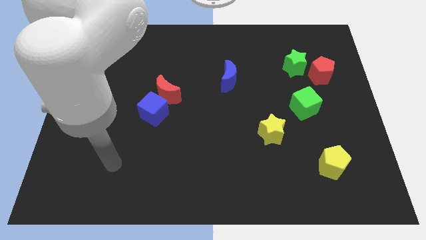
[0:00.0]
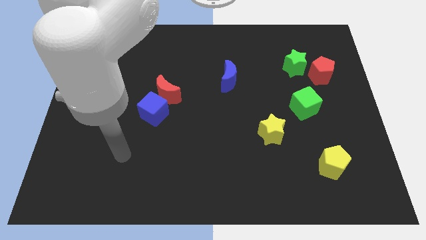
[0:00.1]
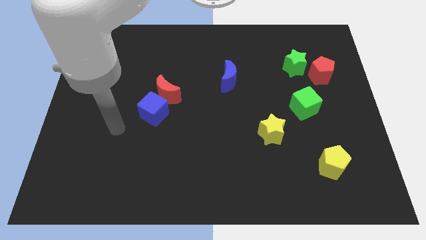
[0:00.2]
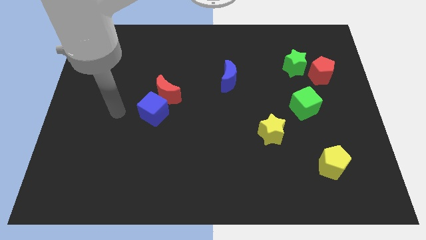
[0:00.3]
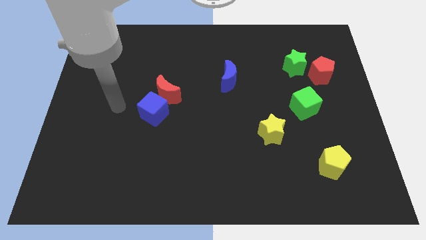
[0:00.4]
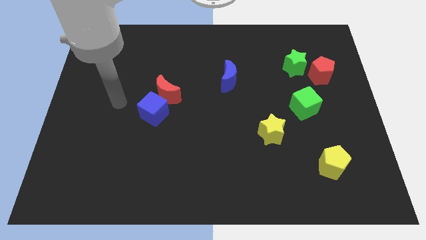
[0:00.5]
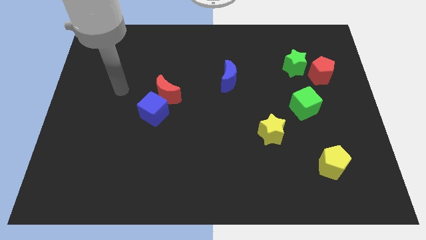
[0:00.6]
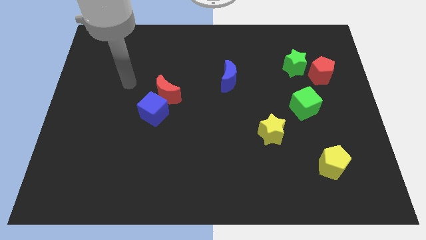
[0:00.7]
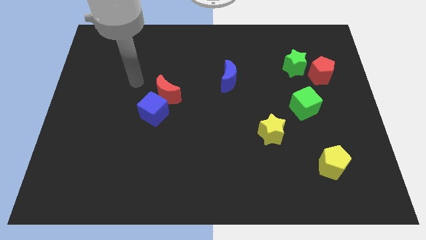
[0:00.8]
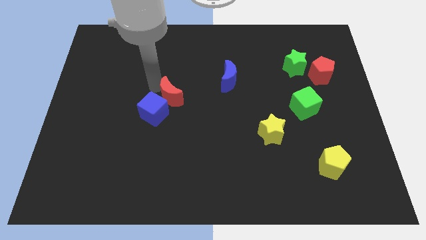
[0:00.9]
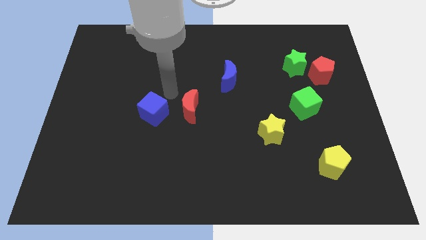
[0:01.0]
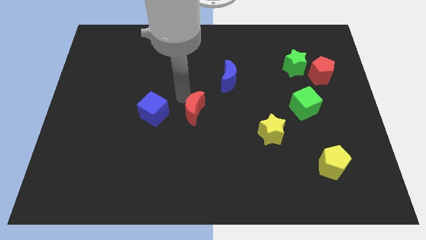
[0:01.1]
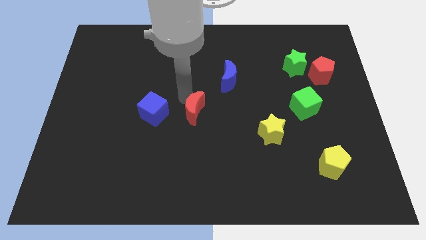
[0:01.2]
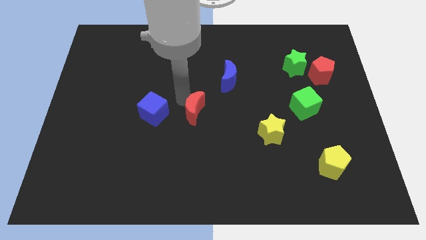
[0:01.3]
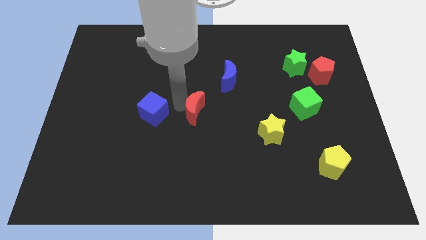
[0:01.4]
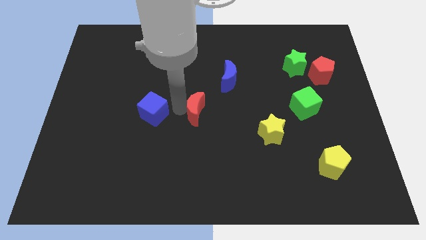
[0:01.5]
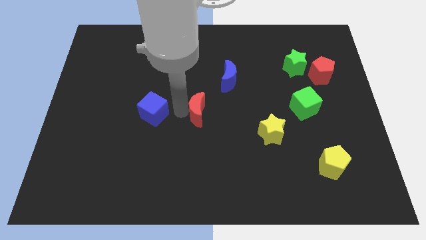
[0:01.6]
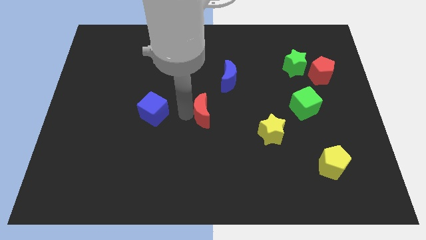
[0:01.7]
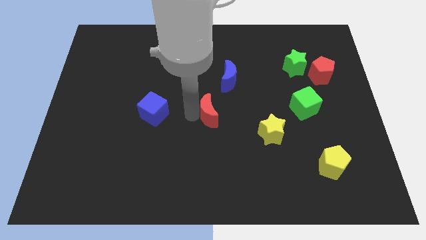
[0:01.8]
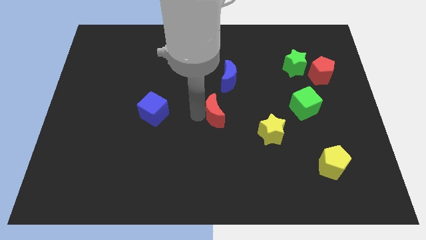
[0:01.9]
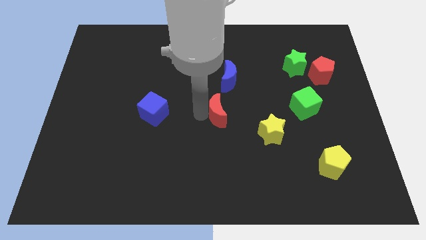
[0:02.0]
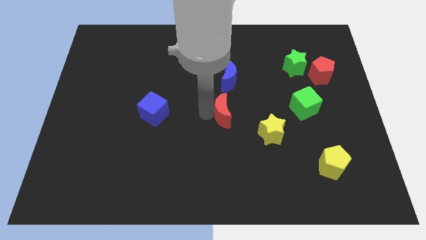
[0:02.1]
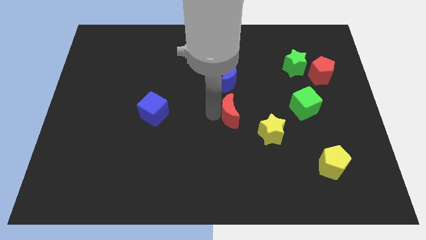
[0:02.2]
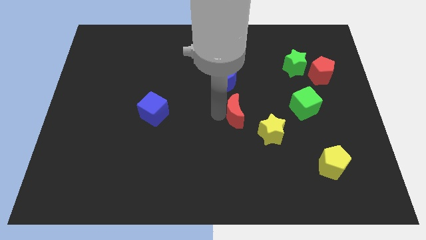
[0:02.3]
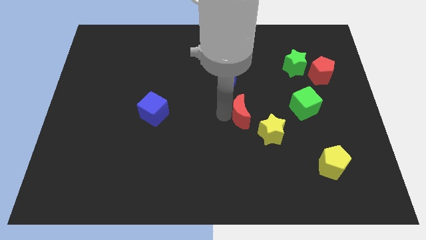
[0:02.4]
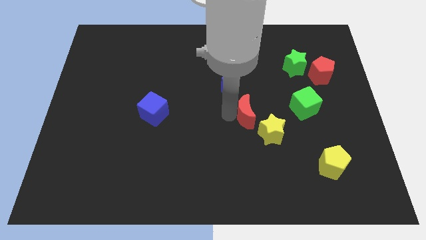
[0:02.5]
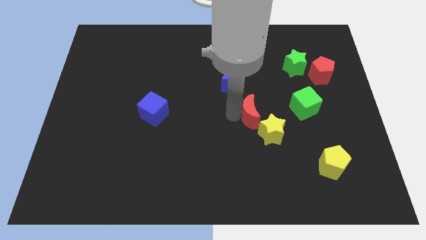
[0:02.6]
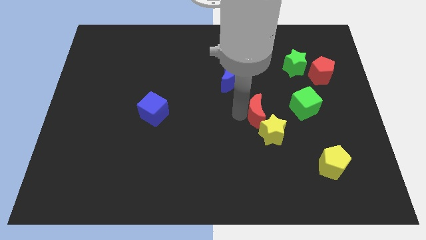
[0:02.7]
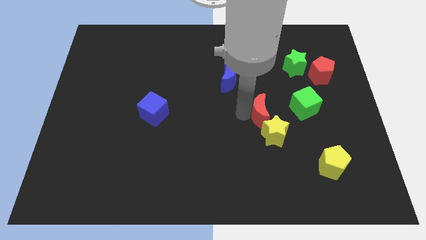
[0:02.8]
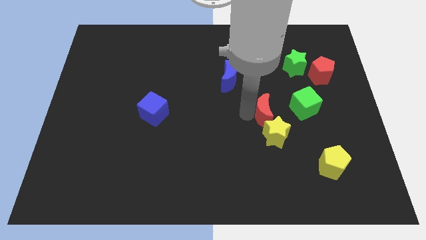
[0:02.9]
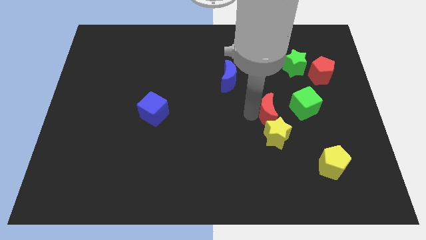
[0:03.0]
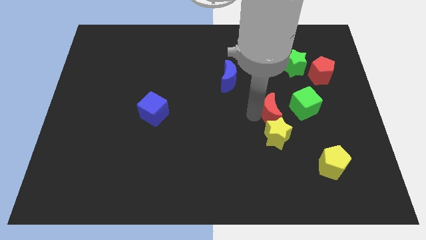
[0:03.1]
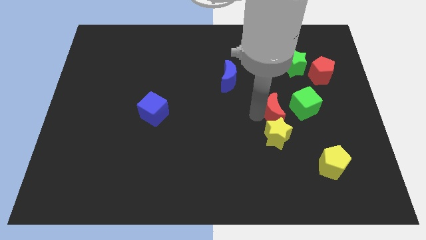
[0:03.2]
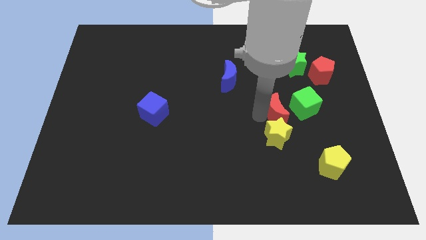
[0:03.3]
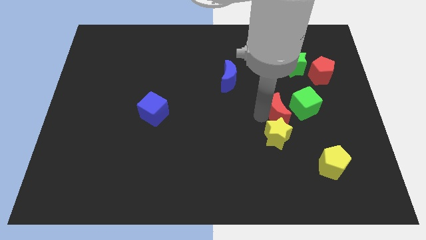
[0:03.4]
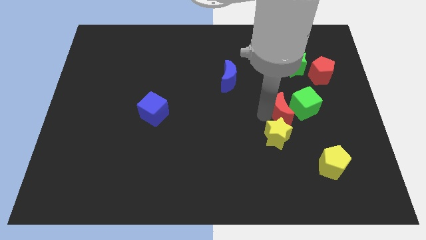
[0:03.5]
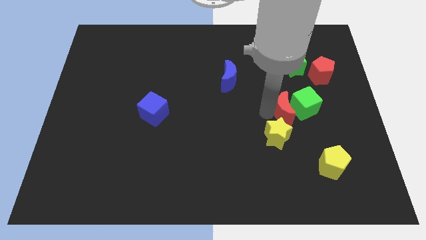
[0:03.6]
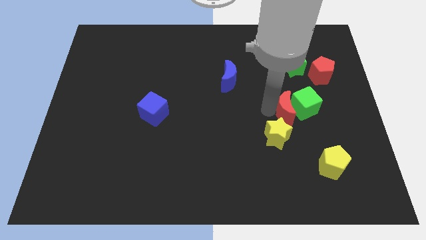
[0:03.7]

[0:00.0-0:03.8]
slide the red moon next to the green cube

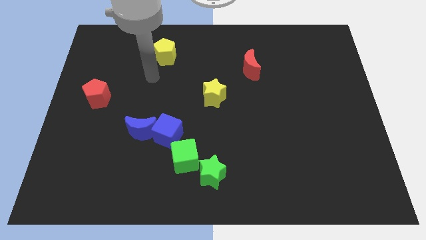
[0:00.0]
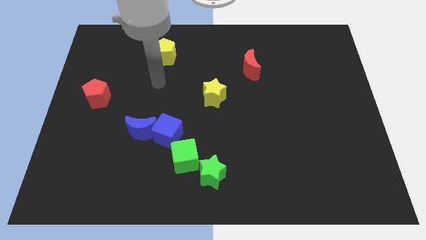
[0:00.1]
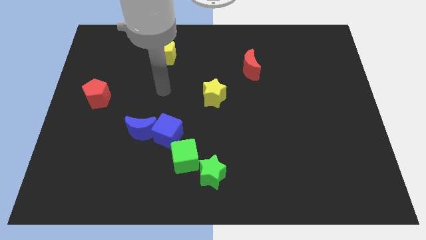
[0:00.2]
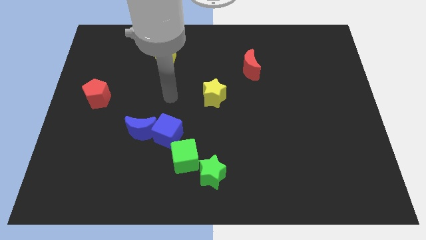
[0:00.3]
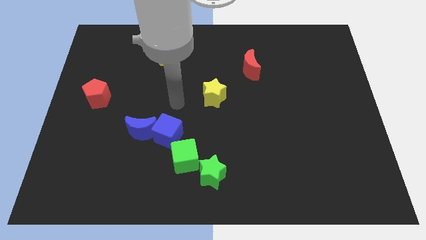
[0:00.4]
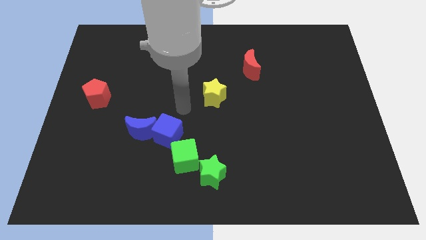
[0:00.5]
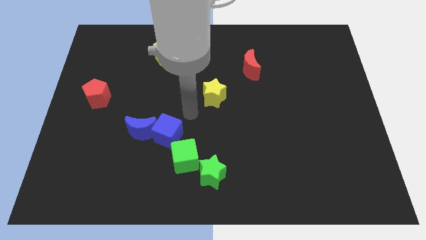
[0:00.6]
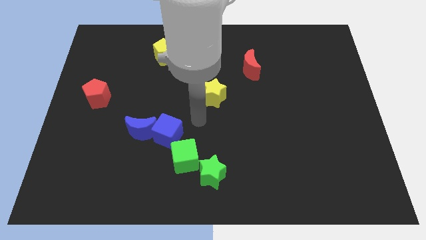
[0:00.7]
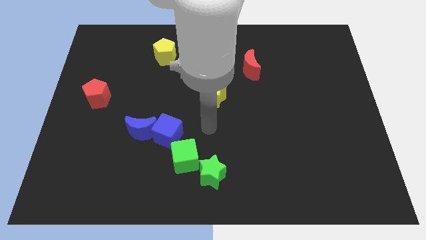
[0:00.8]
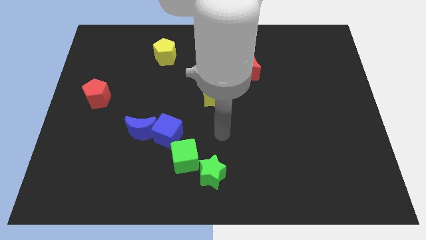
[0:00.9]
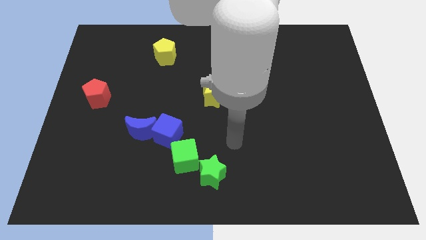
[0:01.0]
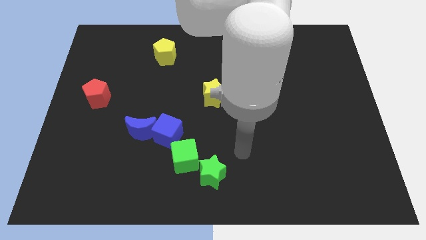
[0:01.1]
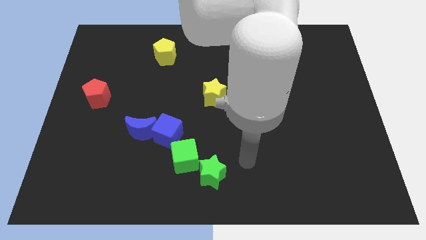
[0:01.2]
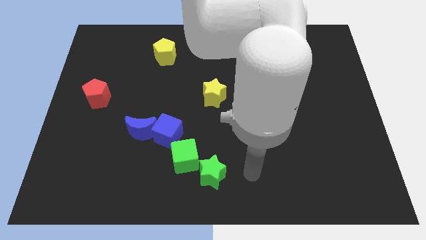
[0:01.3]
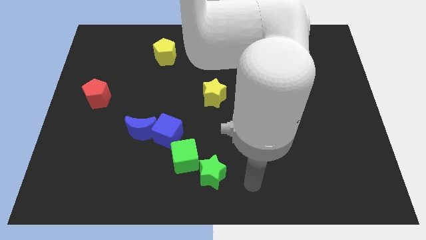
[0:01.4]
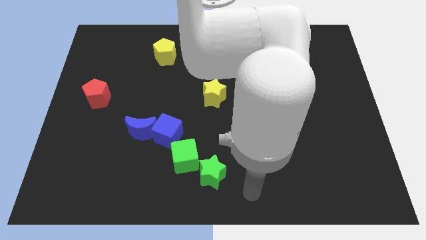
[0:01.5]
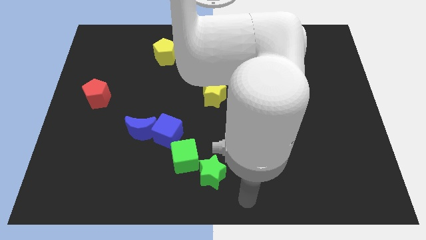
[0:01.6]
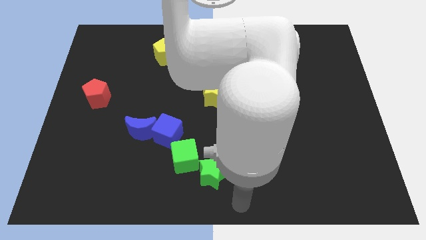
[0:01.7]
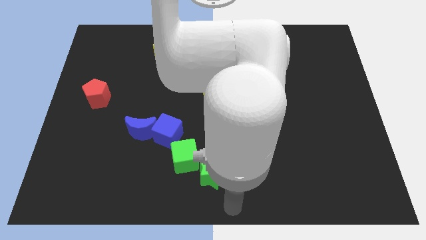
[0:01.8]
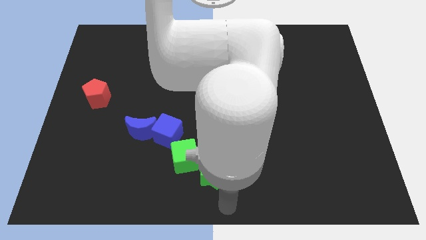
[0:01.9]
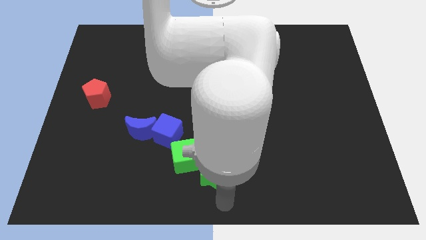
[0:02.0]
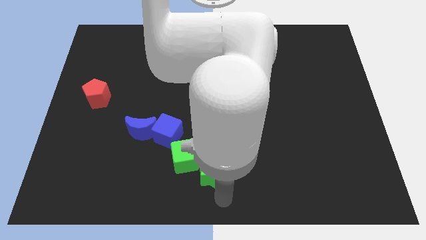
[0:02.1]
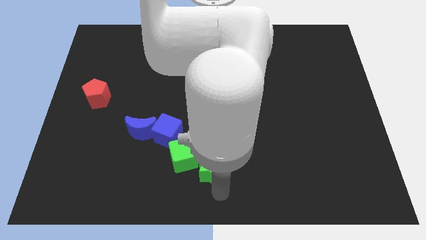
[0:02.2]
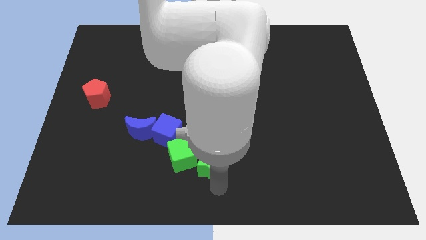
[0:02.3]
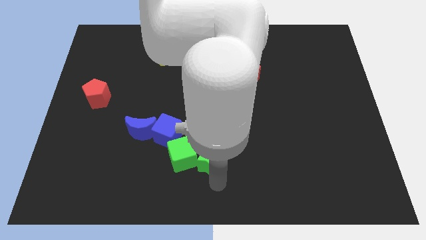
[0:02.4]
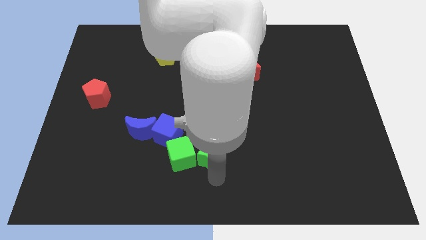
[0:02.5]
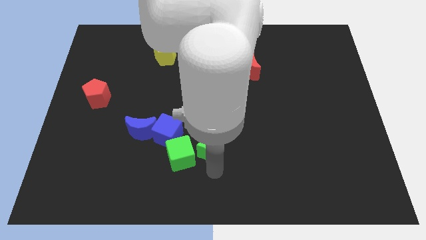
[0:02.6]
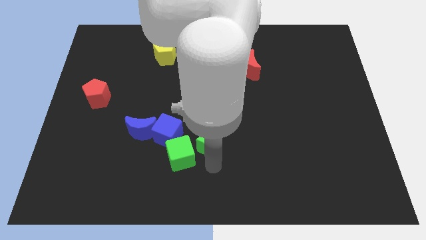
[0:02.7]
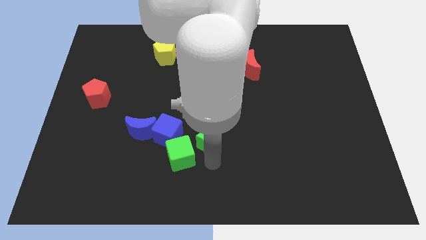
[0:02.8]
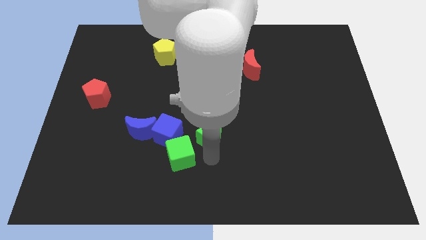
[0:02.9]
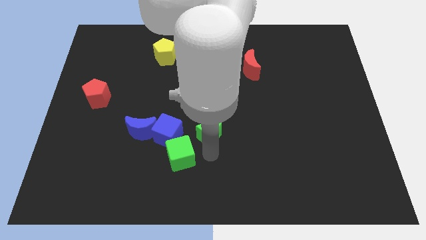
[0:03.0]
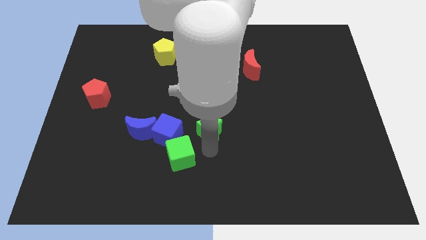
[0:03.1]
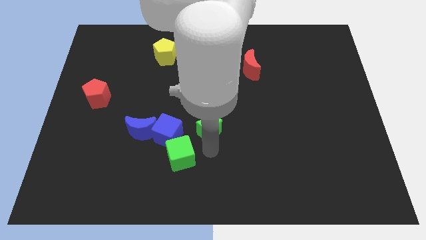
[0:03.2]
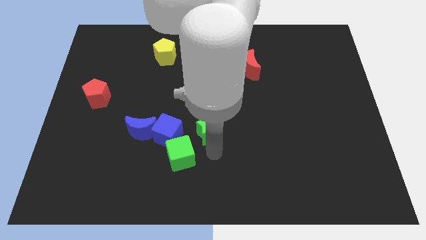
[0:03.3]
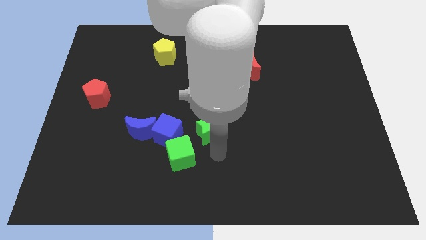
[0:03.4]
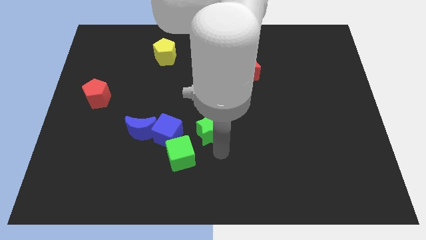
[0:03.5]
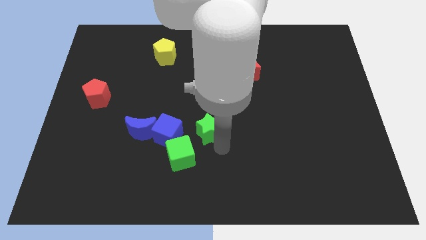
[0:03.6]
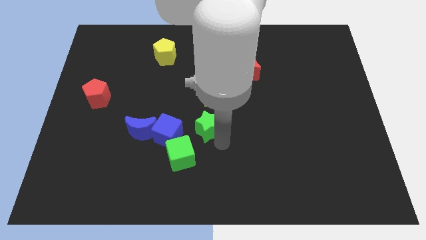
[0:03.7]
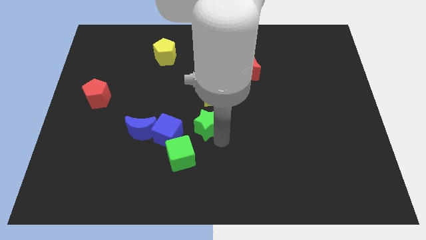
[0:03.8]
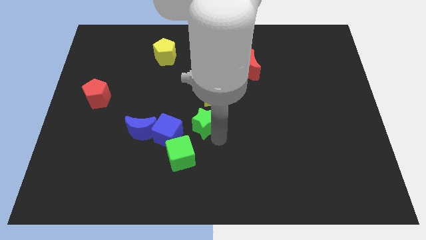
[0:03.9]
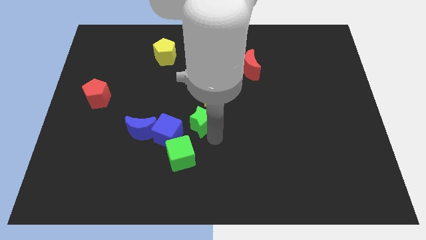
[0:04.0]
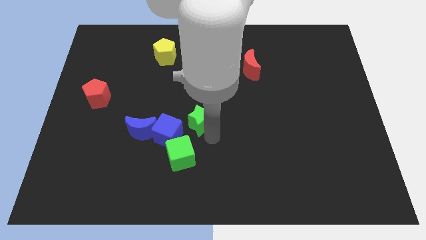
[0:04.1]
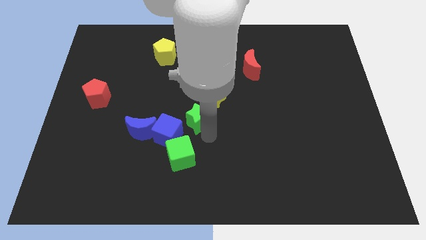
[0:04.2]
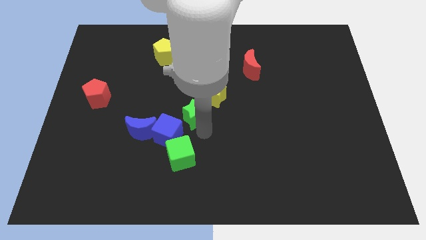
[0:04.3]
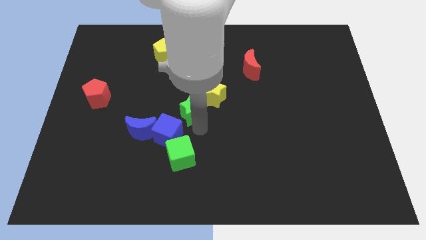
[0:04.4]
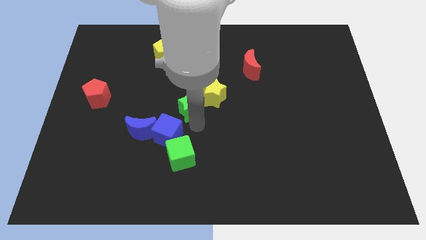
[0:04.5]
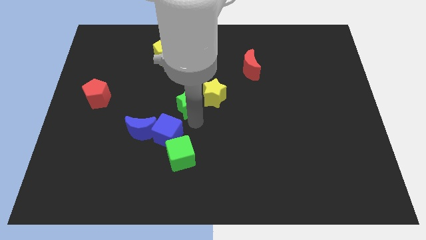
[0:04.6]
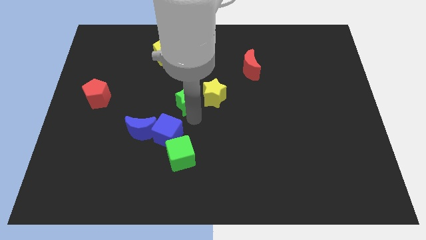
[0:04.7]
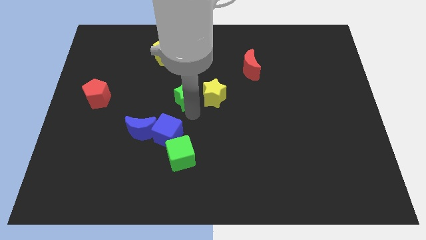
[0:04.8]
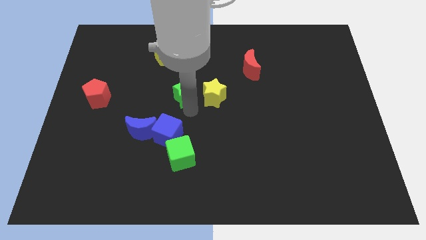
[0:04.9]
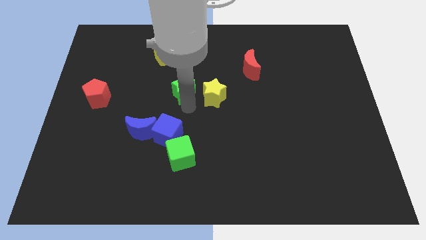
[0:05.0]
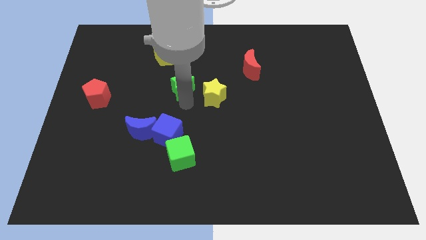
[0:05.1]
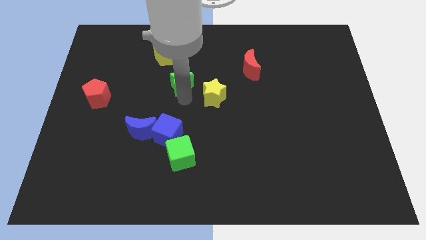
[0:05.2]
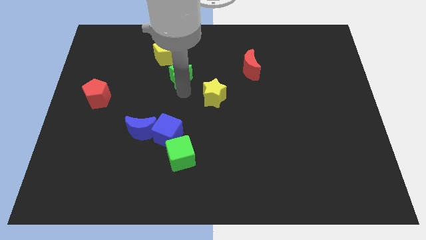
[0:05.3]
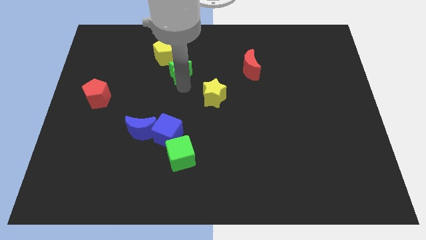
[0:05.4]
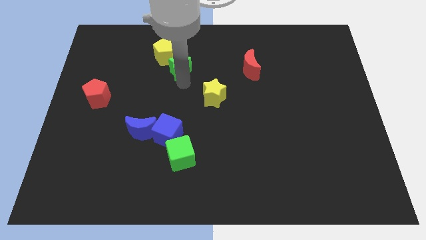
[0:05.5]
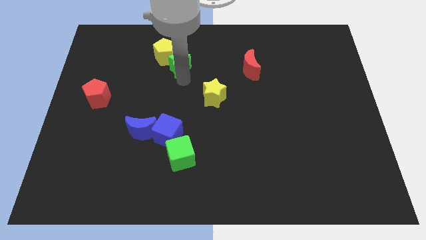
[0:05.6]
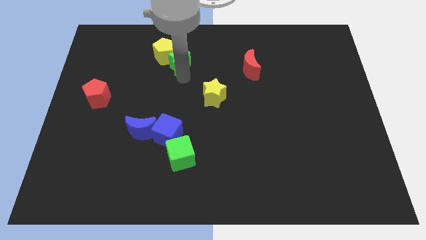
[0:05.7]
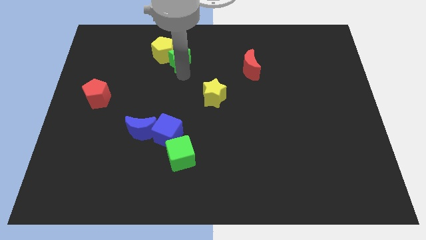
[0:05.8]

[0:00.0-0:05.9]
put the green star towards the yellow pentagon
